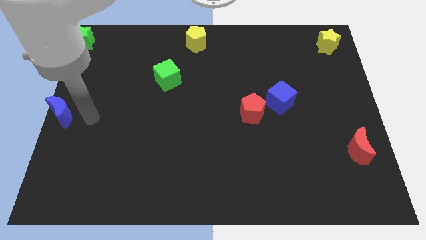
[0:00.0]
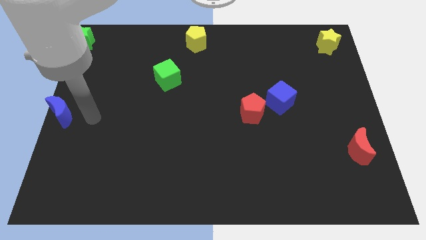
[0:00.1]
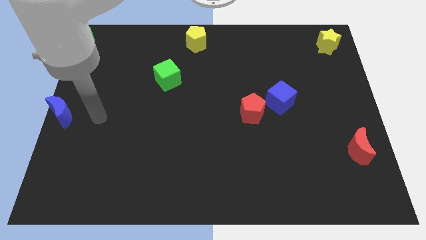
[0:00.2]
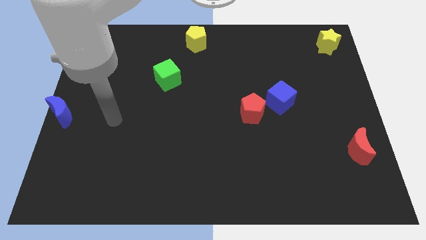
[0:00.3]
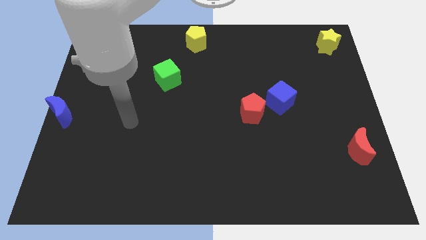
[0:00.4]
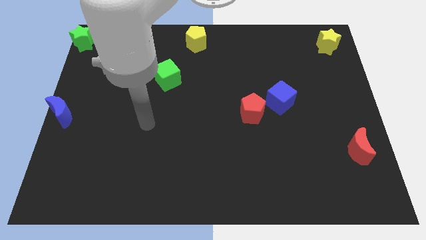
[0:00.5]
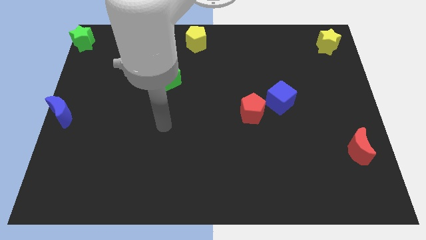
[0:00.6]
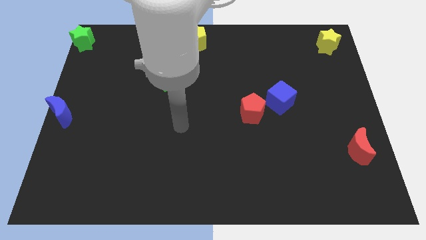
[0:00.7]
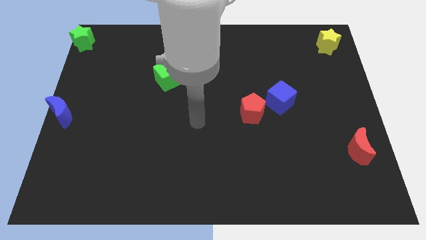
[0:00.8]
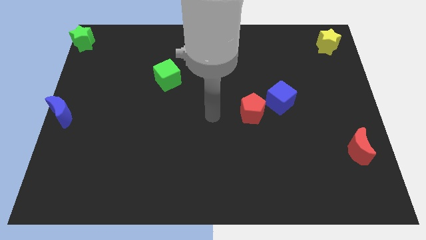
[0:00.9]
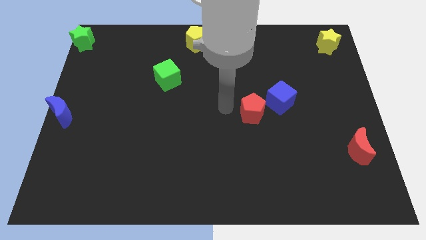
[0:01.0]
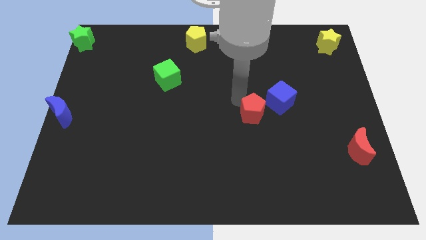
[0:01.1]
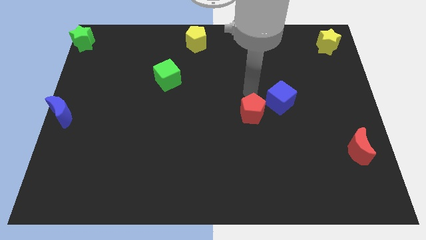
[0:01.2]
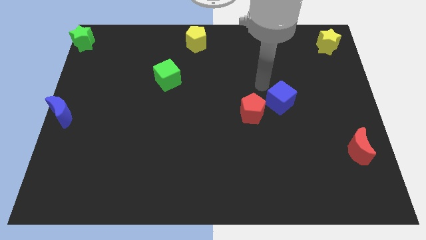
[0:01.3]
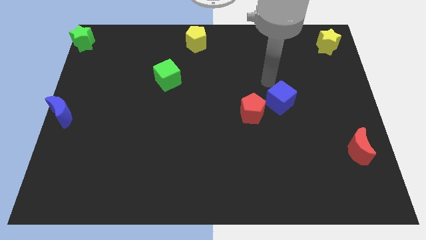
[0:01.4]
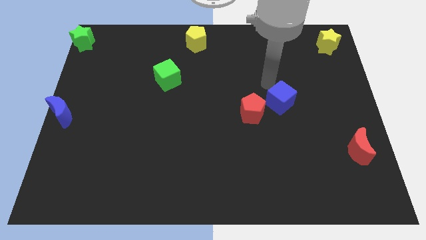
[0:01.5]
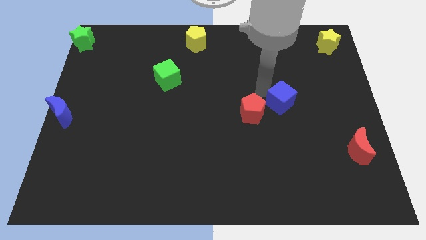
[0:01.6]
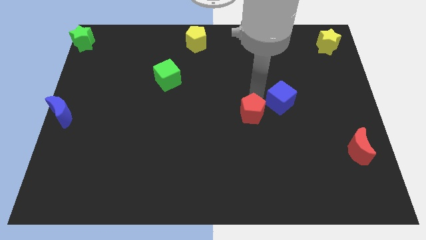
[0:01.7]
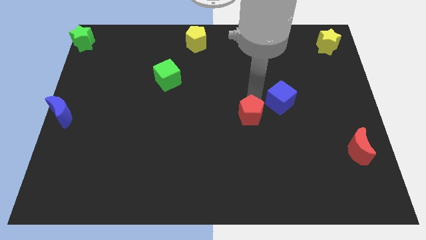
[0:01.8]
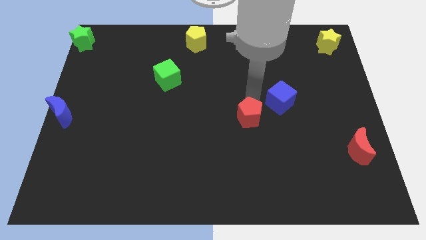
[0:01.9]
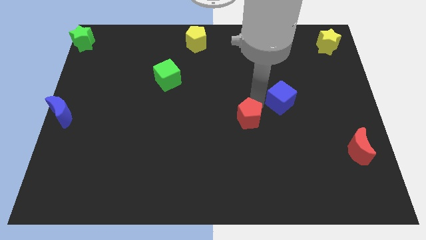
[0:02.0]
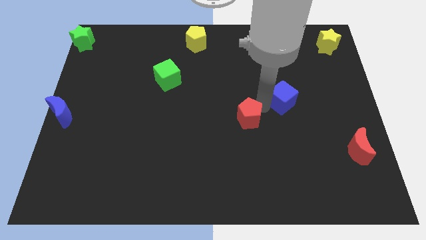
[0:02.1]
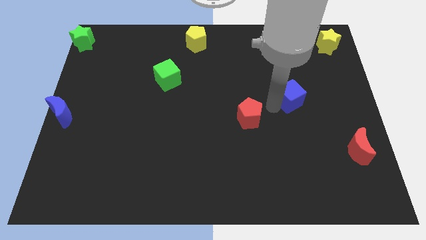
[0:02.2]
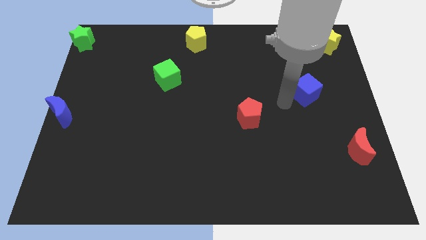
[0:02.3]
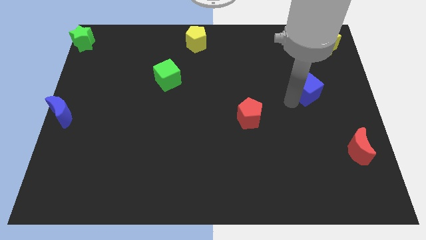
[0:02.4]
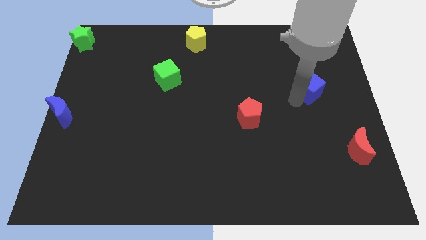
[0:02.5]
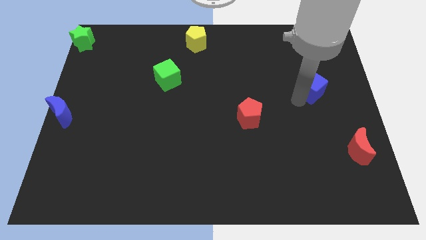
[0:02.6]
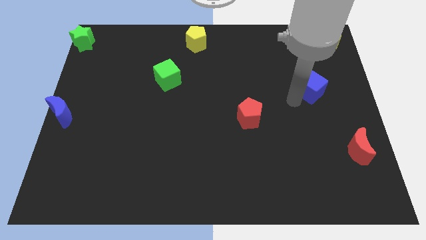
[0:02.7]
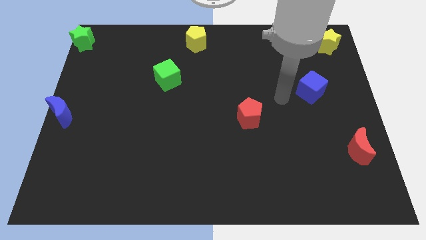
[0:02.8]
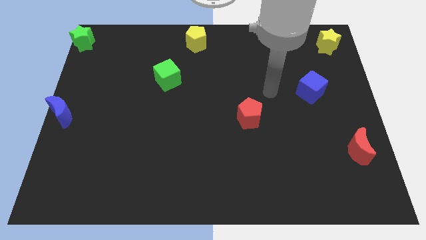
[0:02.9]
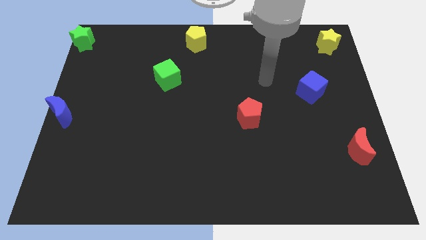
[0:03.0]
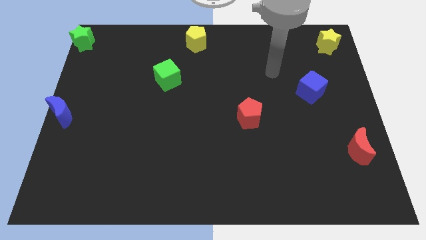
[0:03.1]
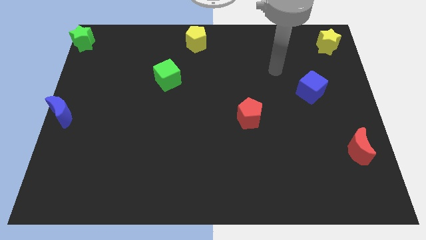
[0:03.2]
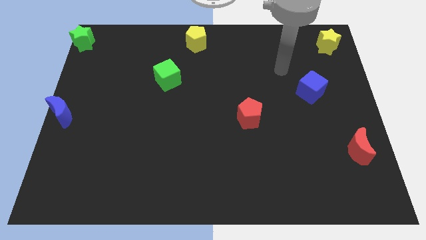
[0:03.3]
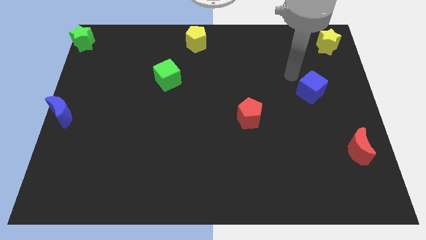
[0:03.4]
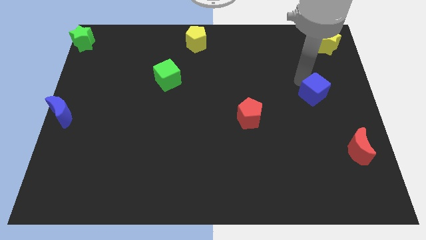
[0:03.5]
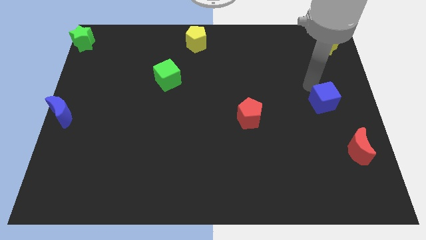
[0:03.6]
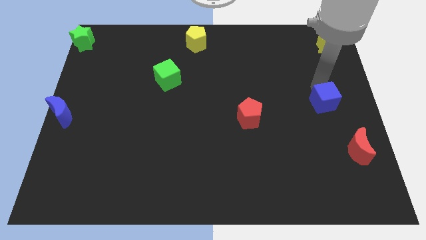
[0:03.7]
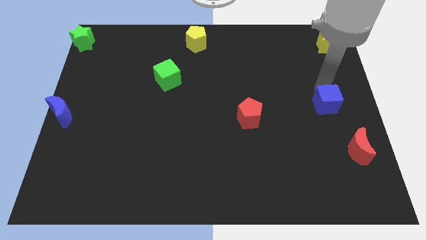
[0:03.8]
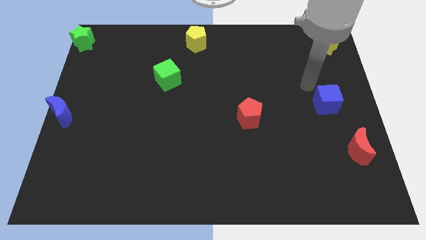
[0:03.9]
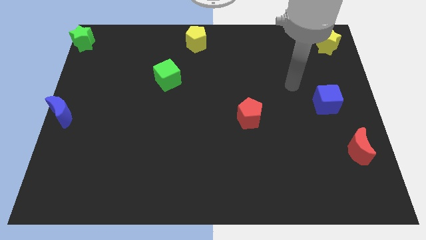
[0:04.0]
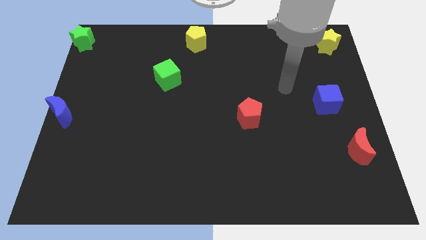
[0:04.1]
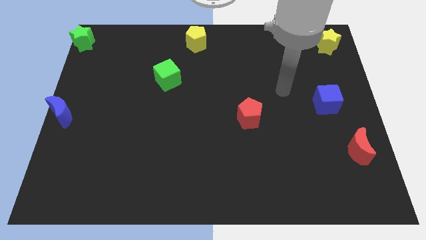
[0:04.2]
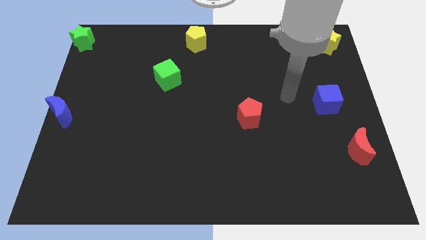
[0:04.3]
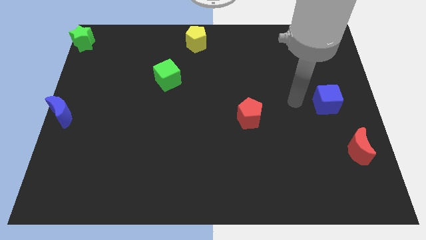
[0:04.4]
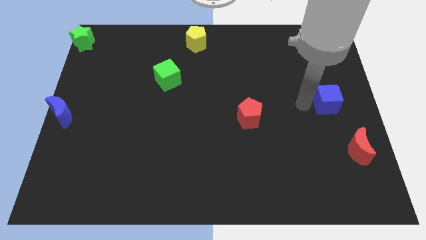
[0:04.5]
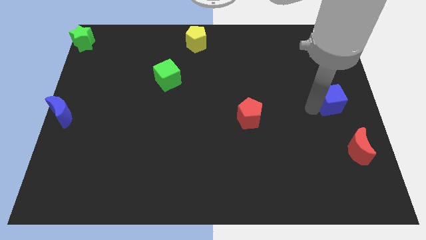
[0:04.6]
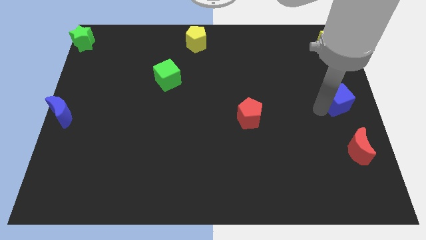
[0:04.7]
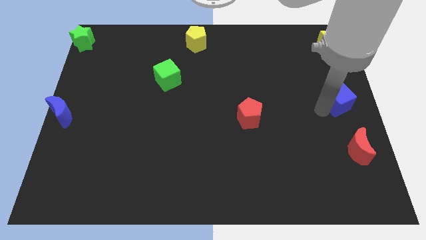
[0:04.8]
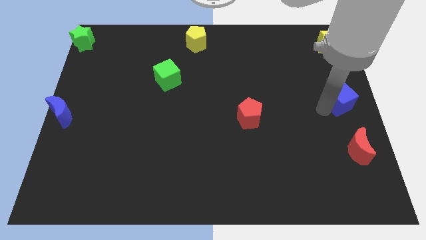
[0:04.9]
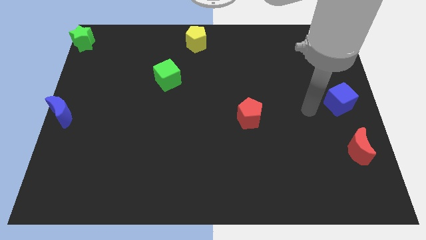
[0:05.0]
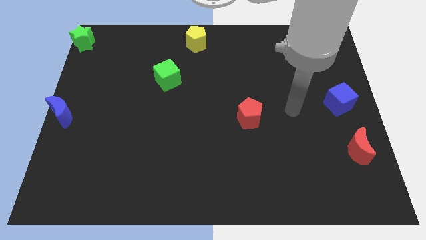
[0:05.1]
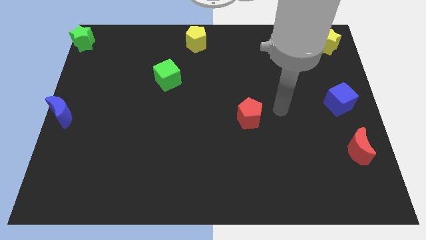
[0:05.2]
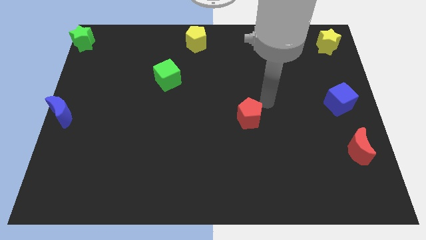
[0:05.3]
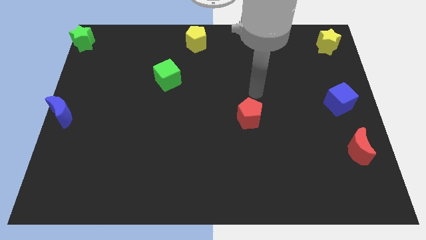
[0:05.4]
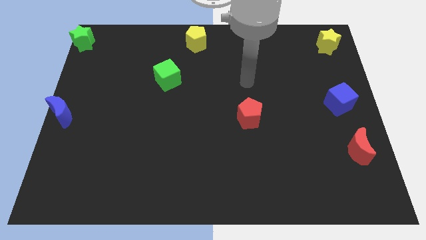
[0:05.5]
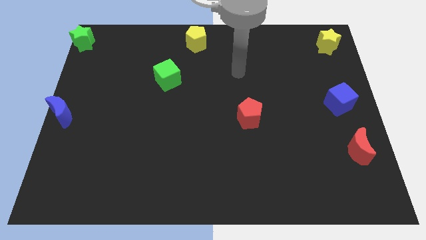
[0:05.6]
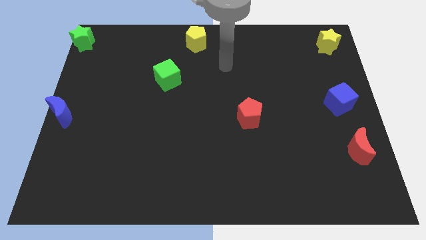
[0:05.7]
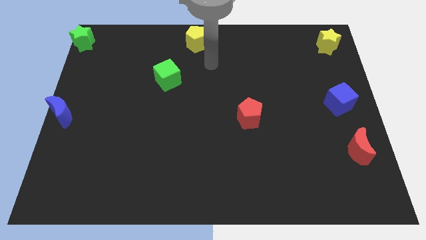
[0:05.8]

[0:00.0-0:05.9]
move blue cube diagonally above the red moon

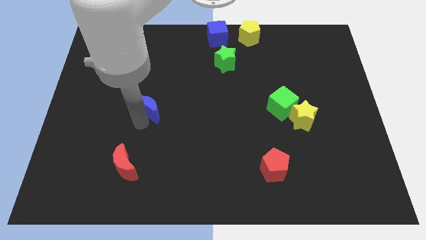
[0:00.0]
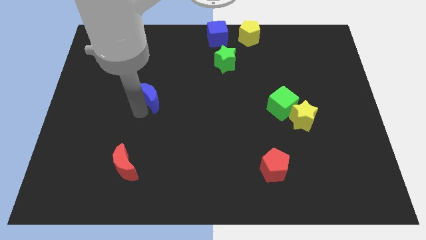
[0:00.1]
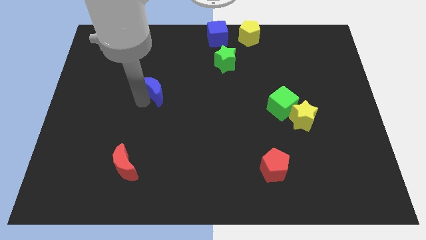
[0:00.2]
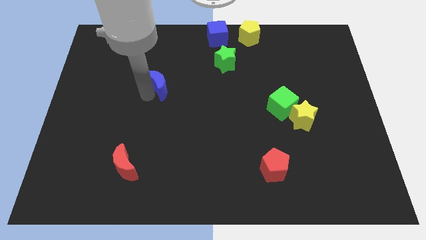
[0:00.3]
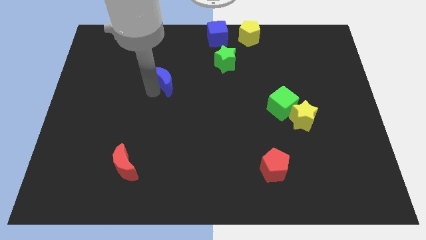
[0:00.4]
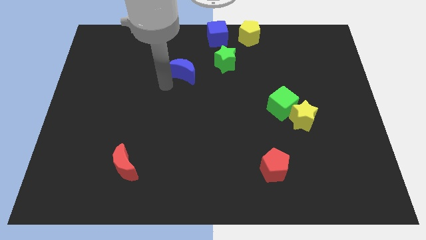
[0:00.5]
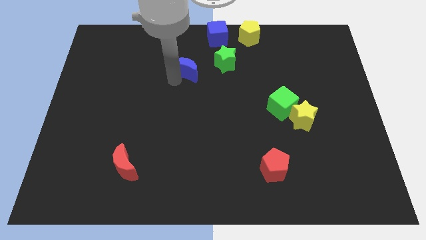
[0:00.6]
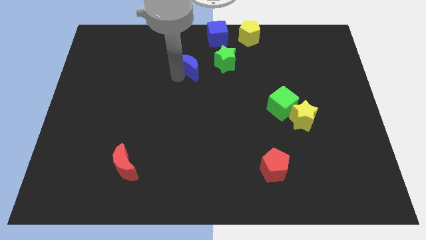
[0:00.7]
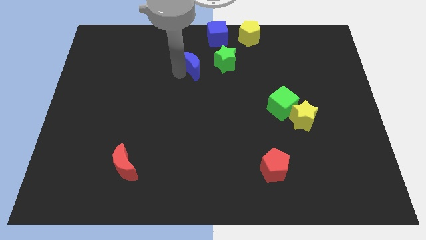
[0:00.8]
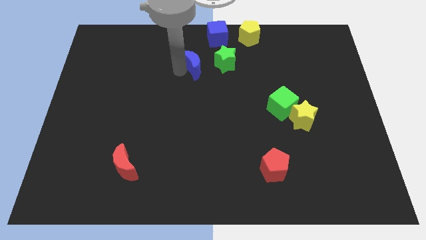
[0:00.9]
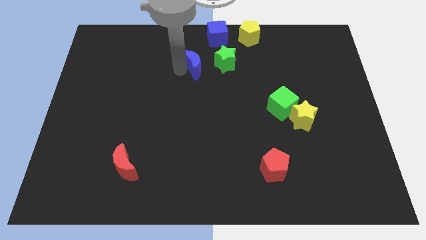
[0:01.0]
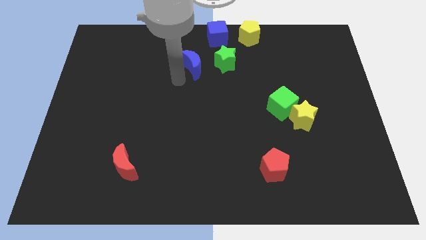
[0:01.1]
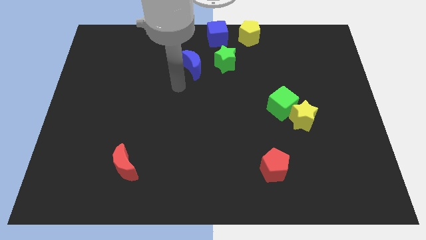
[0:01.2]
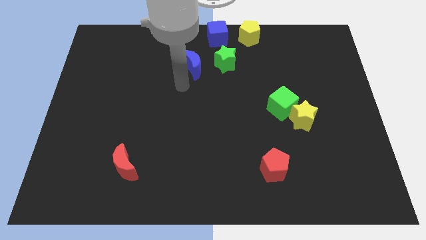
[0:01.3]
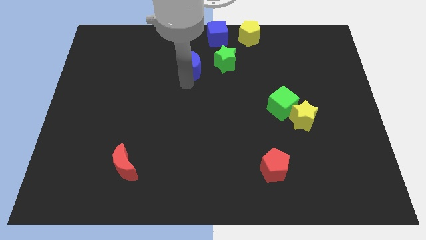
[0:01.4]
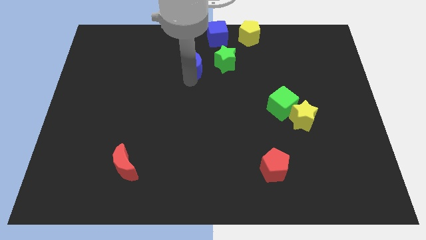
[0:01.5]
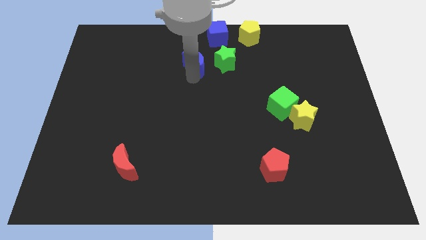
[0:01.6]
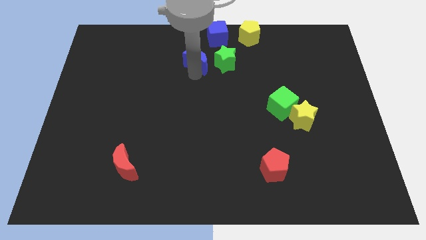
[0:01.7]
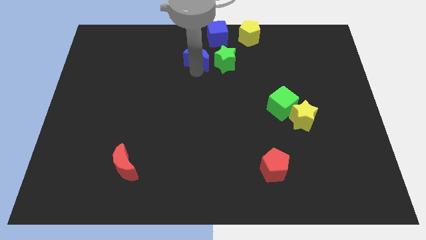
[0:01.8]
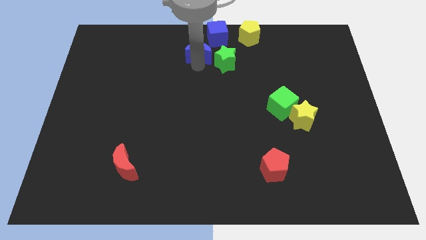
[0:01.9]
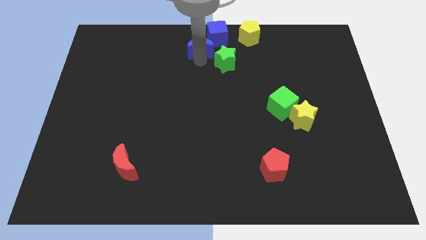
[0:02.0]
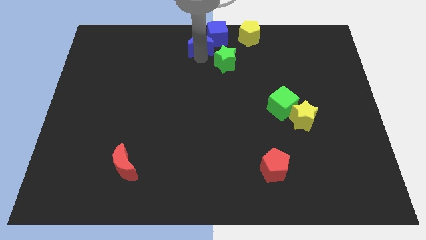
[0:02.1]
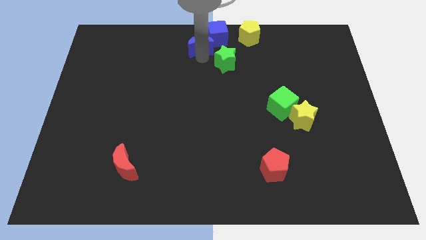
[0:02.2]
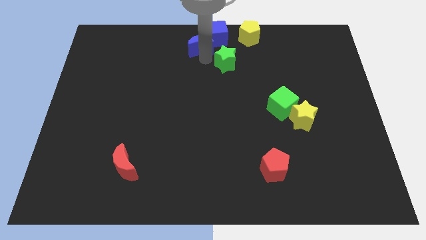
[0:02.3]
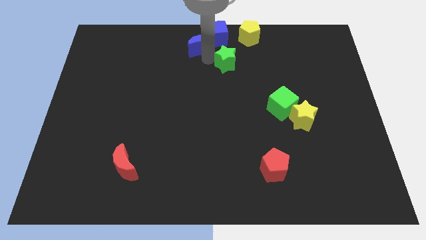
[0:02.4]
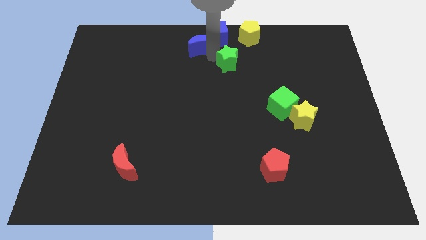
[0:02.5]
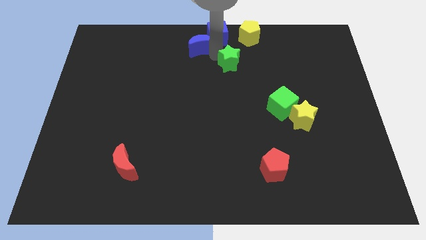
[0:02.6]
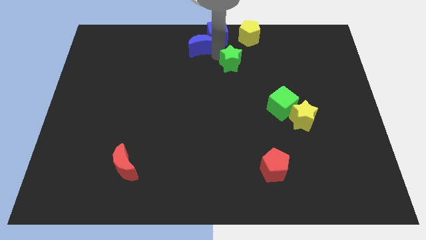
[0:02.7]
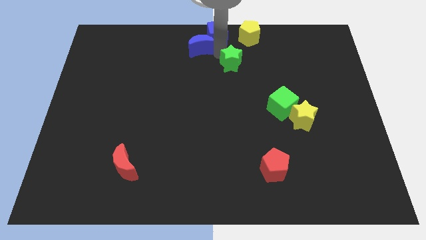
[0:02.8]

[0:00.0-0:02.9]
move the blue crescent into the blue cube
